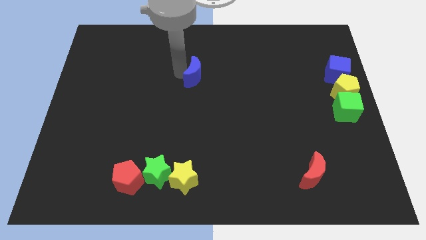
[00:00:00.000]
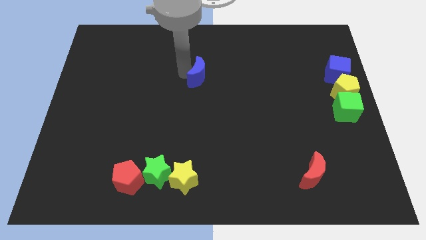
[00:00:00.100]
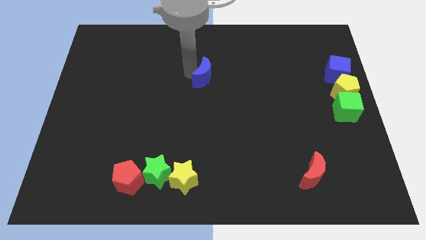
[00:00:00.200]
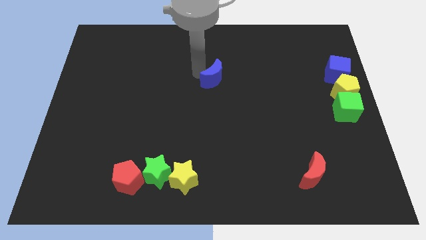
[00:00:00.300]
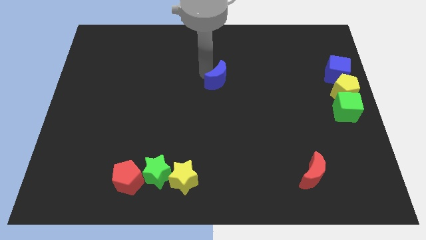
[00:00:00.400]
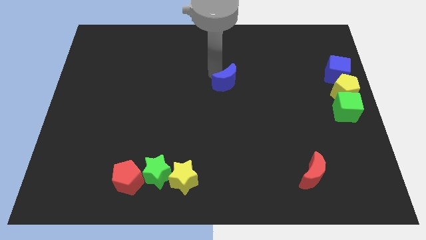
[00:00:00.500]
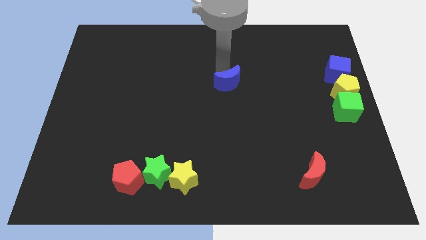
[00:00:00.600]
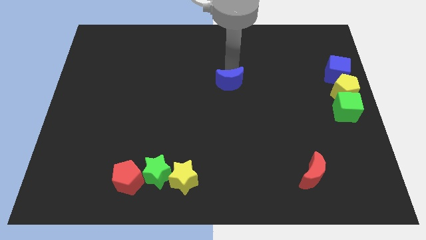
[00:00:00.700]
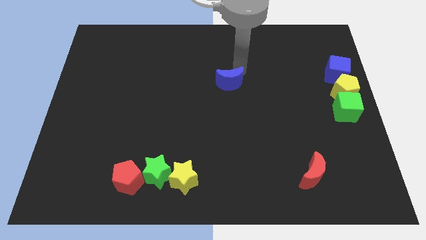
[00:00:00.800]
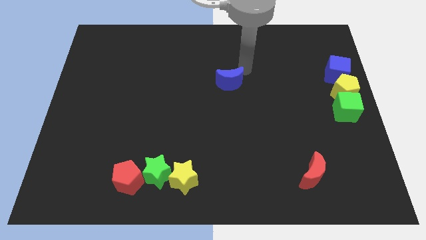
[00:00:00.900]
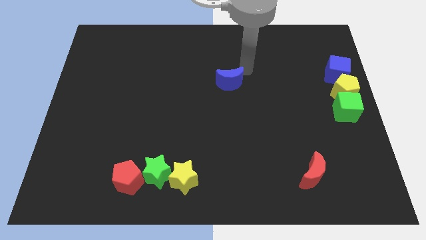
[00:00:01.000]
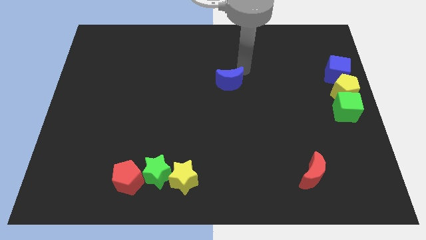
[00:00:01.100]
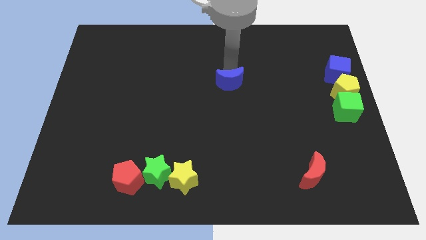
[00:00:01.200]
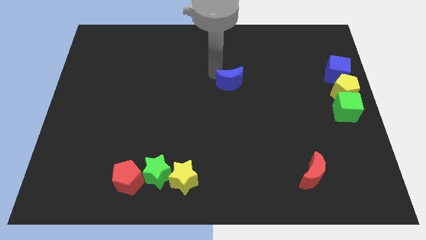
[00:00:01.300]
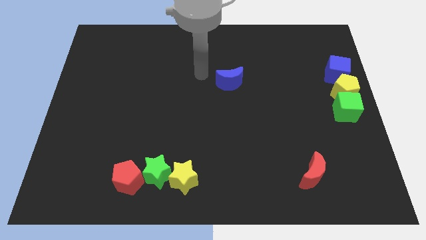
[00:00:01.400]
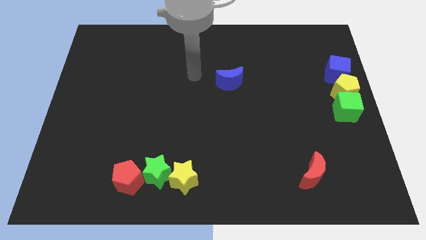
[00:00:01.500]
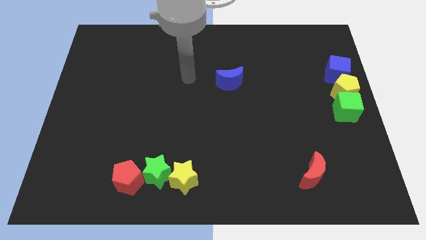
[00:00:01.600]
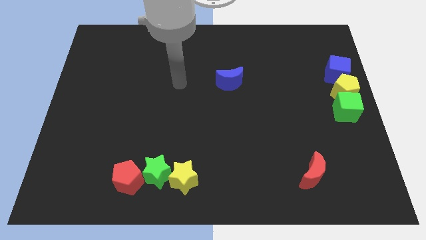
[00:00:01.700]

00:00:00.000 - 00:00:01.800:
push the blue moon to the right side slightly

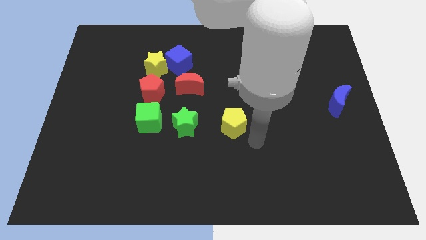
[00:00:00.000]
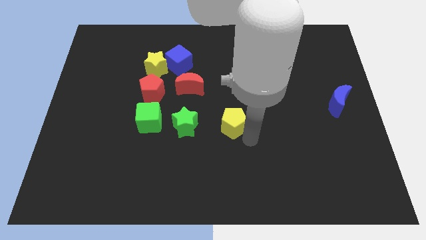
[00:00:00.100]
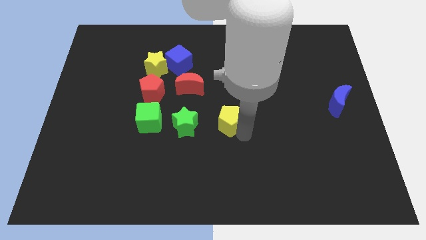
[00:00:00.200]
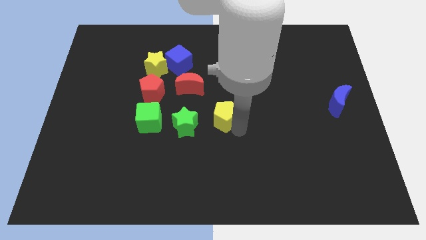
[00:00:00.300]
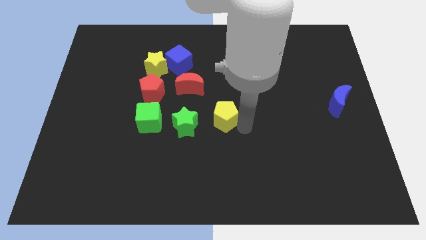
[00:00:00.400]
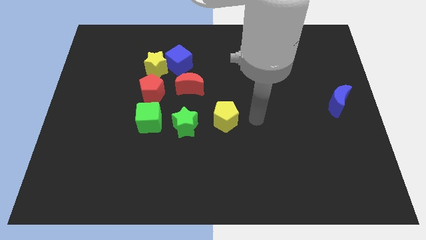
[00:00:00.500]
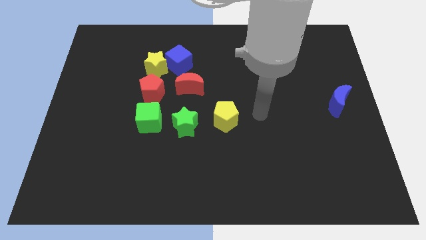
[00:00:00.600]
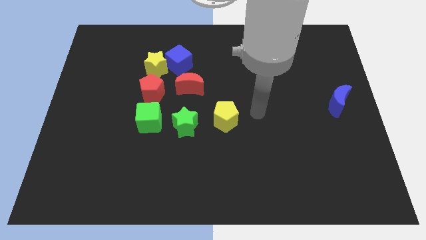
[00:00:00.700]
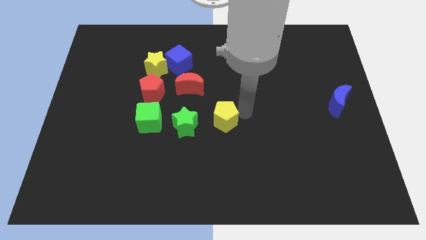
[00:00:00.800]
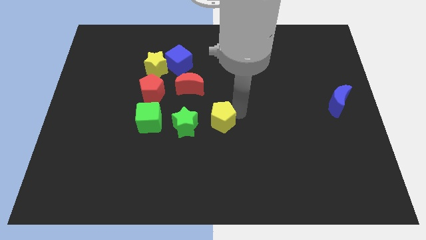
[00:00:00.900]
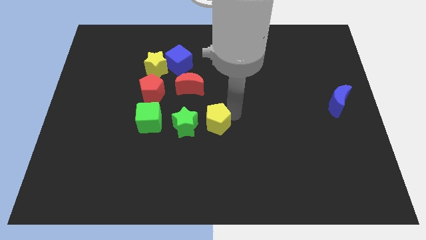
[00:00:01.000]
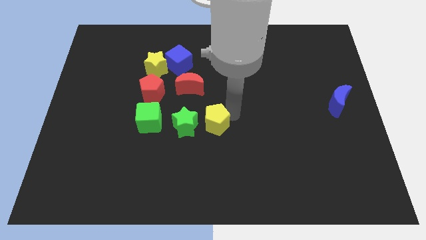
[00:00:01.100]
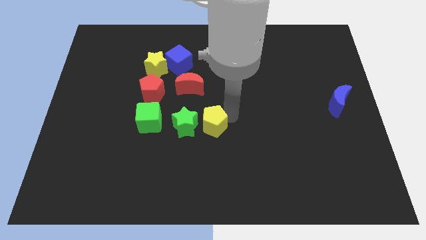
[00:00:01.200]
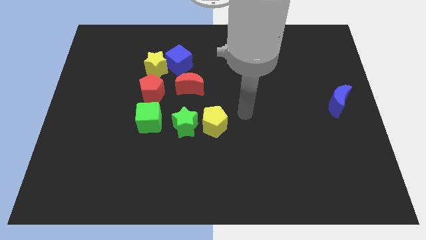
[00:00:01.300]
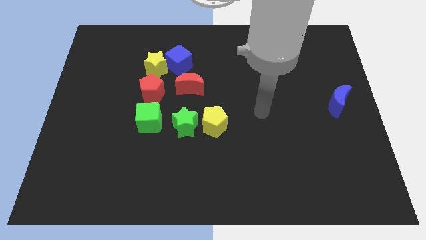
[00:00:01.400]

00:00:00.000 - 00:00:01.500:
put the yellow pentagon on the right side of the green star

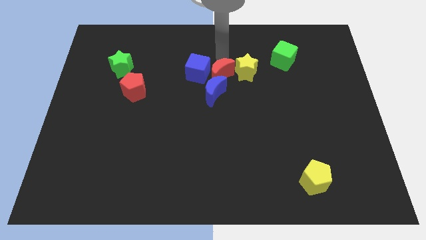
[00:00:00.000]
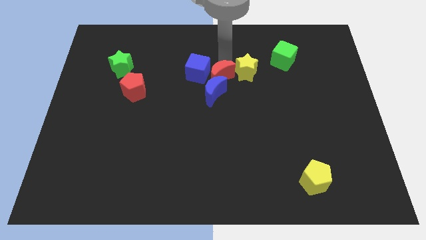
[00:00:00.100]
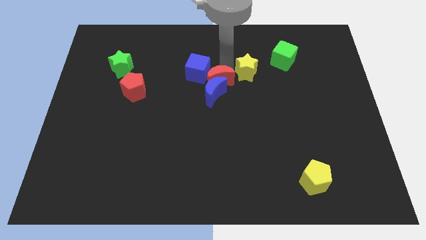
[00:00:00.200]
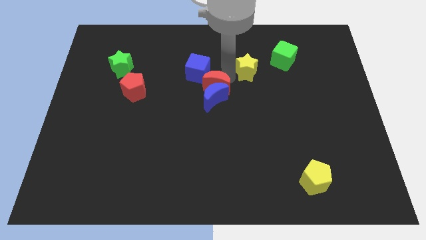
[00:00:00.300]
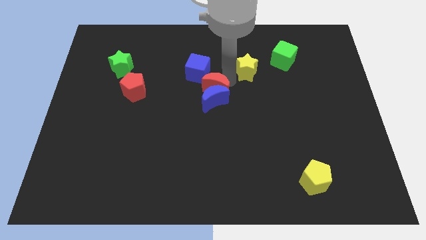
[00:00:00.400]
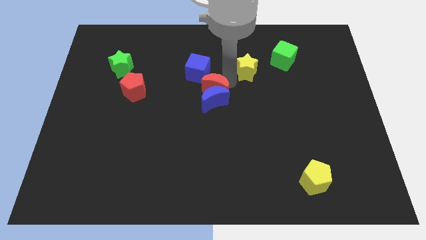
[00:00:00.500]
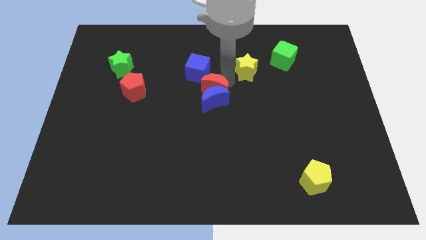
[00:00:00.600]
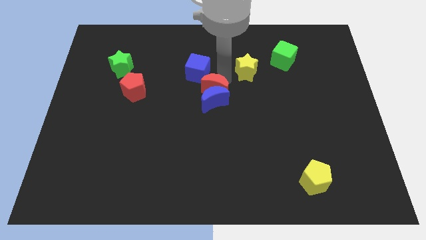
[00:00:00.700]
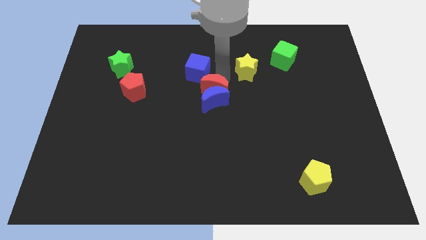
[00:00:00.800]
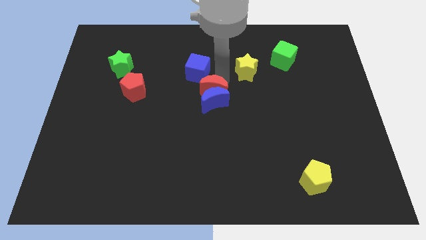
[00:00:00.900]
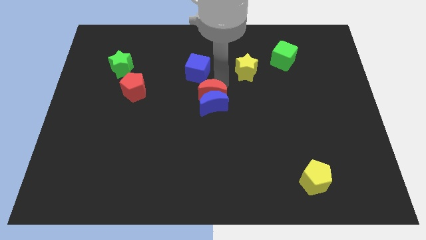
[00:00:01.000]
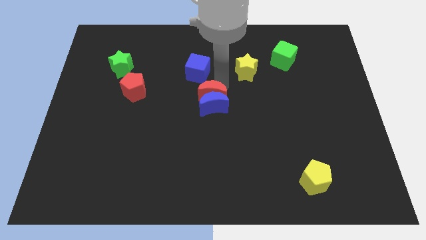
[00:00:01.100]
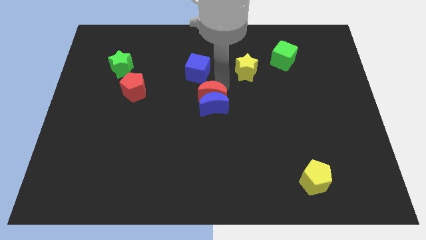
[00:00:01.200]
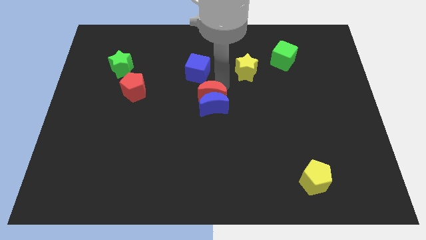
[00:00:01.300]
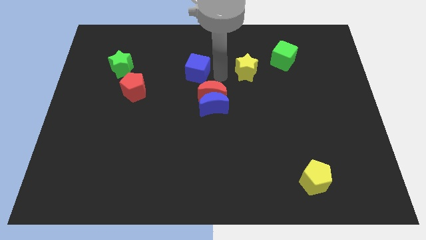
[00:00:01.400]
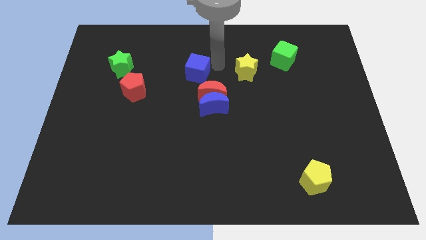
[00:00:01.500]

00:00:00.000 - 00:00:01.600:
push red moon into blue moon

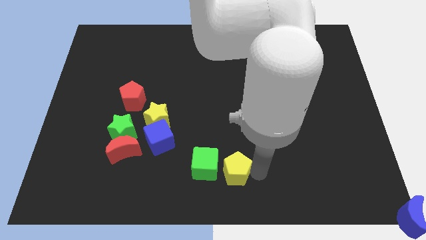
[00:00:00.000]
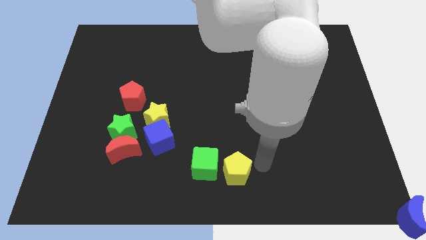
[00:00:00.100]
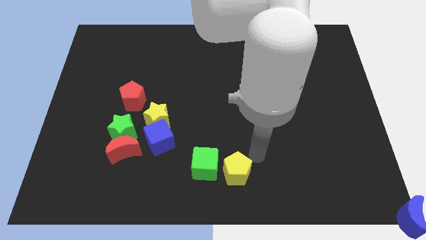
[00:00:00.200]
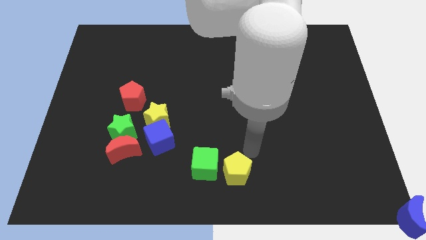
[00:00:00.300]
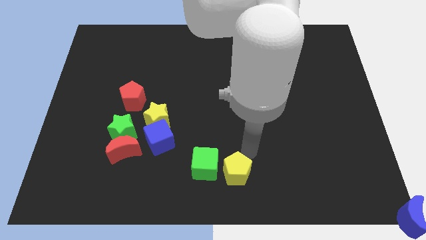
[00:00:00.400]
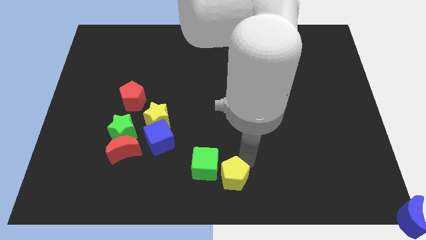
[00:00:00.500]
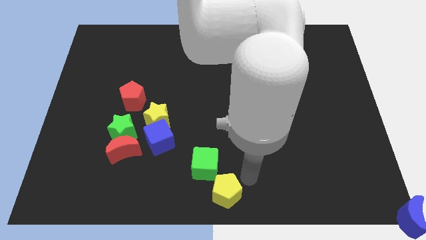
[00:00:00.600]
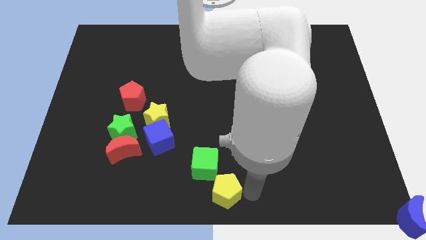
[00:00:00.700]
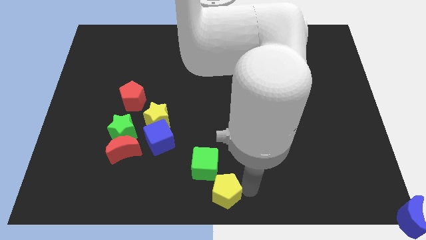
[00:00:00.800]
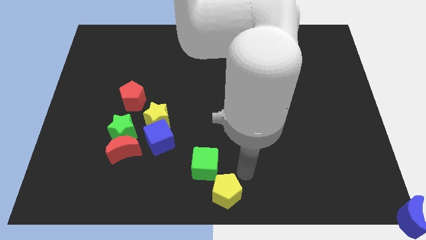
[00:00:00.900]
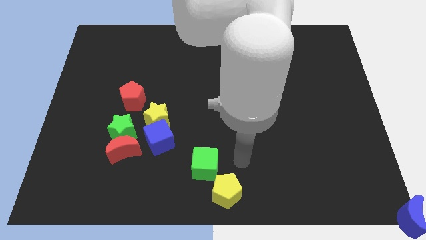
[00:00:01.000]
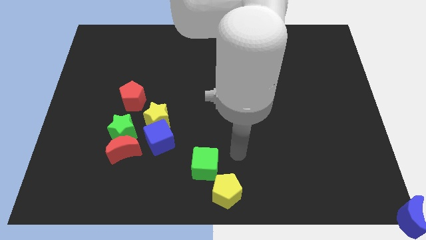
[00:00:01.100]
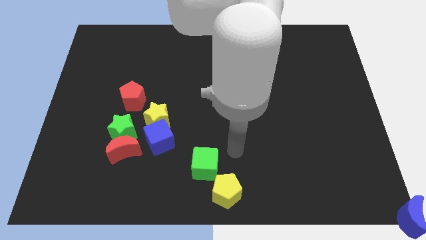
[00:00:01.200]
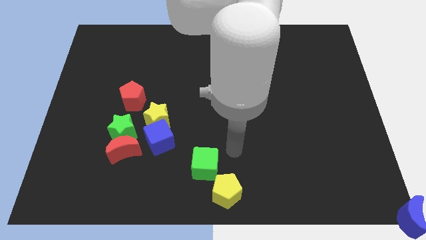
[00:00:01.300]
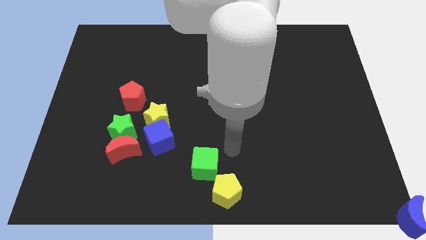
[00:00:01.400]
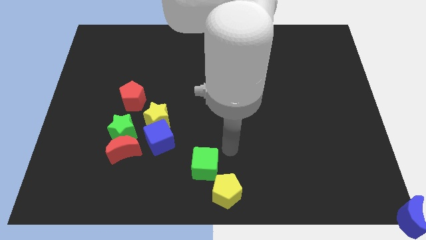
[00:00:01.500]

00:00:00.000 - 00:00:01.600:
push the yellow pentagon to the bottom center of the board

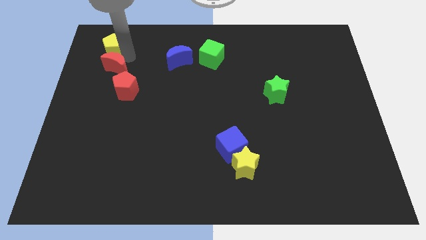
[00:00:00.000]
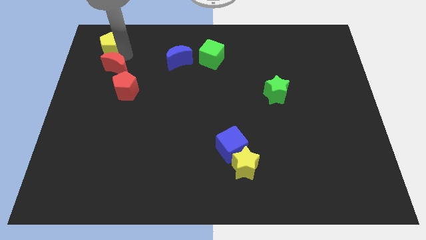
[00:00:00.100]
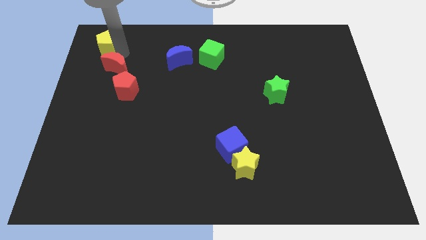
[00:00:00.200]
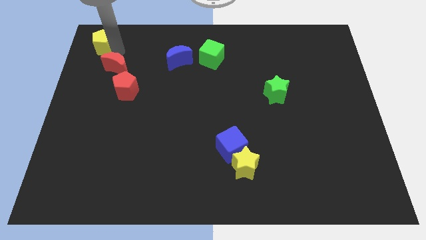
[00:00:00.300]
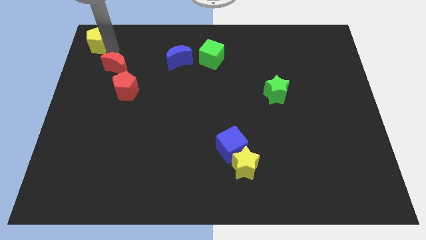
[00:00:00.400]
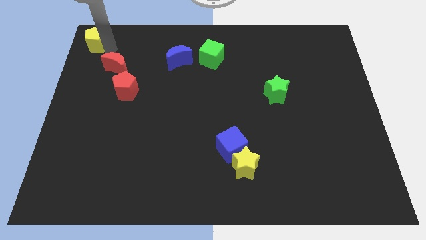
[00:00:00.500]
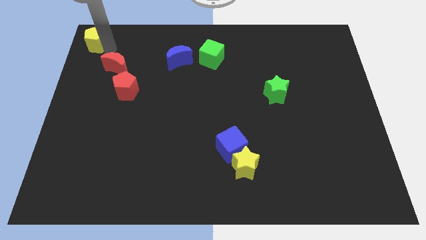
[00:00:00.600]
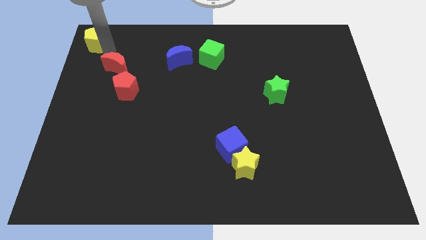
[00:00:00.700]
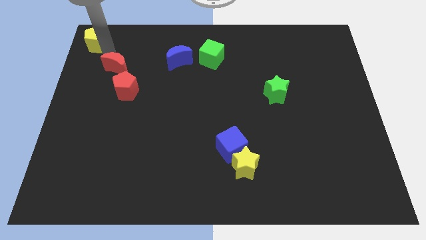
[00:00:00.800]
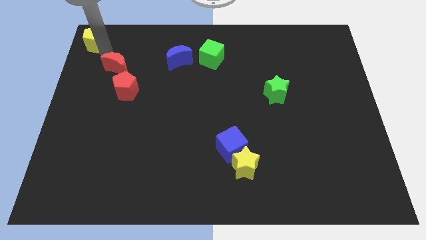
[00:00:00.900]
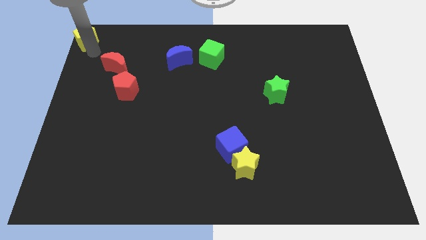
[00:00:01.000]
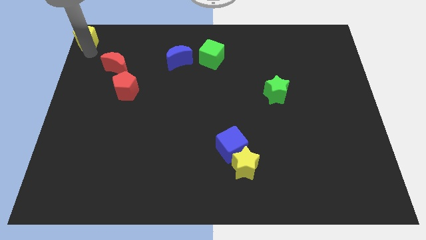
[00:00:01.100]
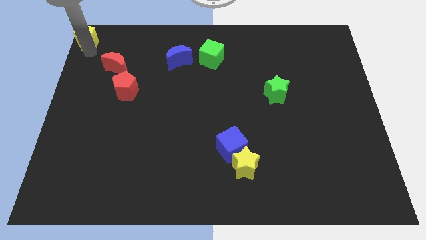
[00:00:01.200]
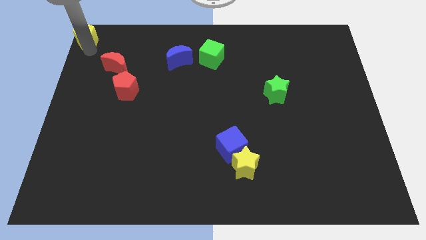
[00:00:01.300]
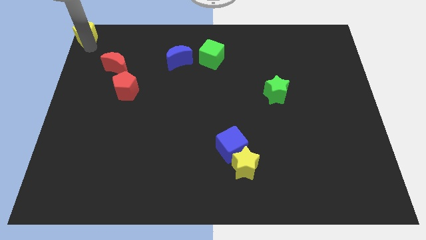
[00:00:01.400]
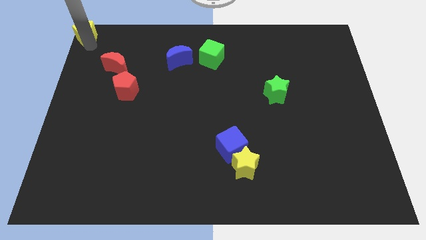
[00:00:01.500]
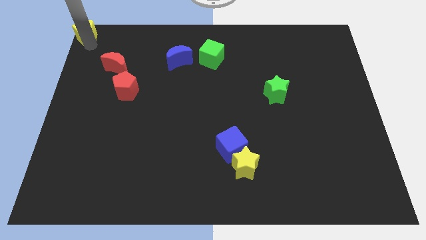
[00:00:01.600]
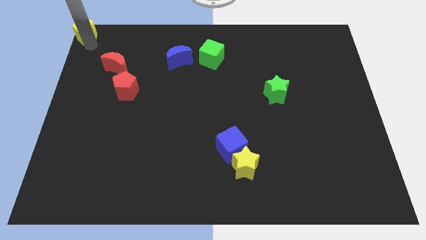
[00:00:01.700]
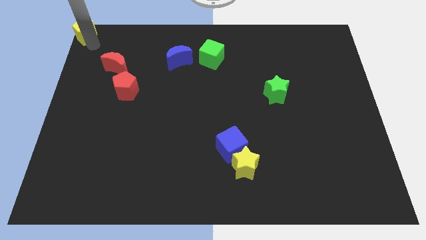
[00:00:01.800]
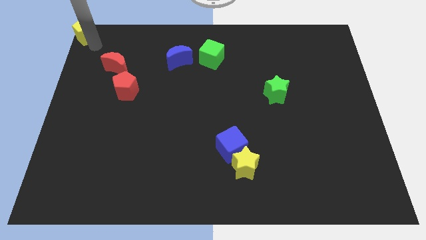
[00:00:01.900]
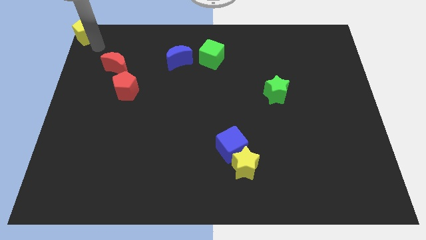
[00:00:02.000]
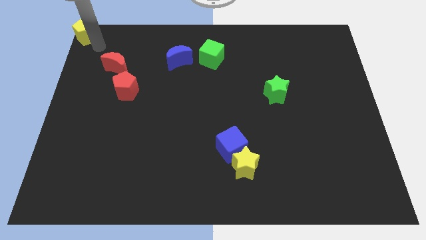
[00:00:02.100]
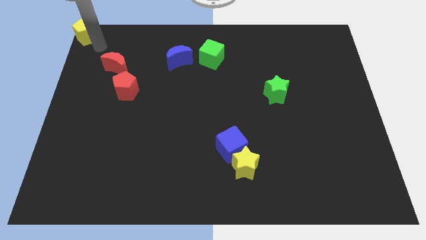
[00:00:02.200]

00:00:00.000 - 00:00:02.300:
push yellow pentagon towards top left corner of the board

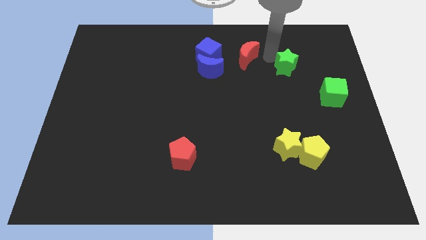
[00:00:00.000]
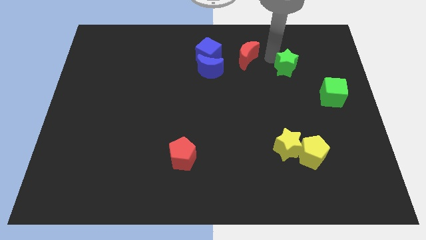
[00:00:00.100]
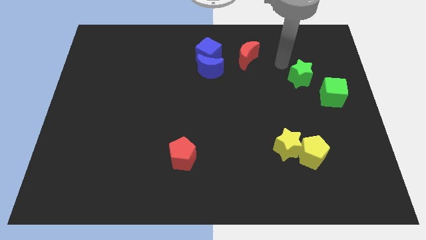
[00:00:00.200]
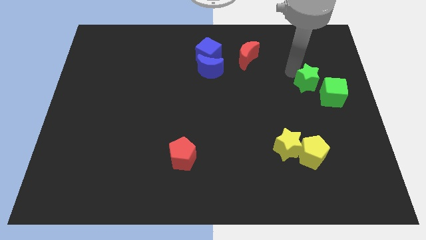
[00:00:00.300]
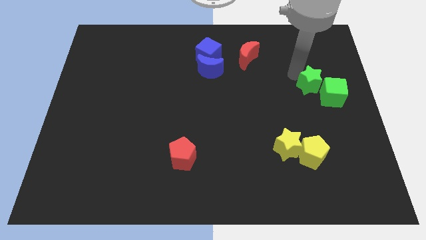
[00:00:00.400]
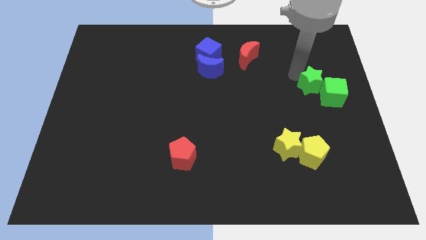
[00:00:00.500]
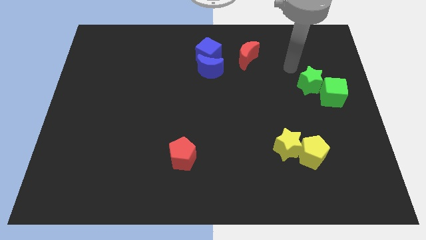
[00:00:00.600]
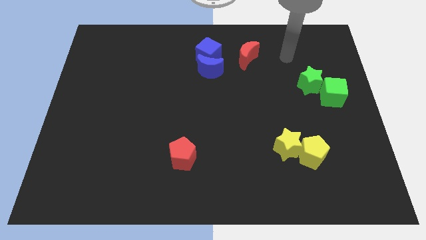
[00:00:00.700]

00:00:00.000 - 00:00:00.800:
push the two green blocks together
